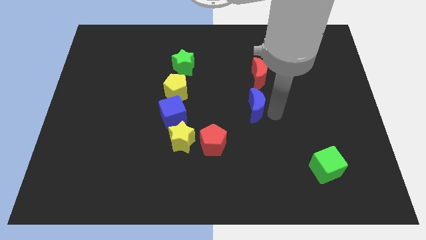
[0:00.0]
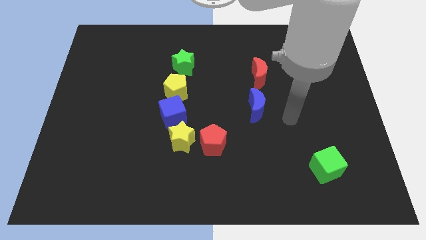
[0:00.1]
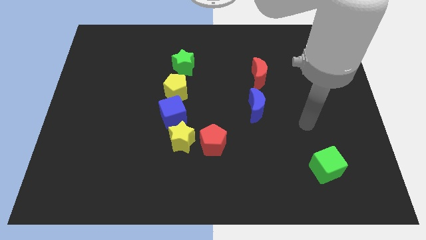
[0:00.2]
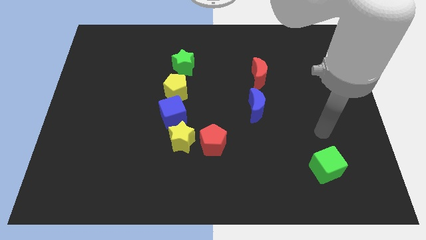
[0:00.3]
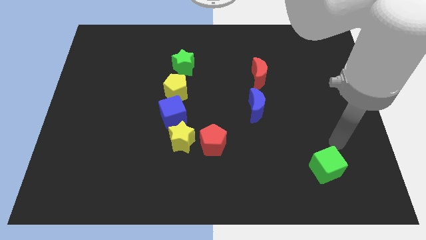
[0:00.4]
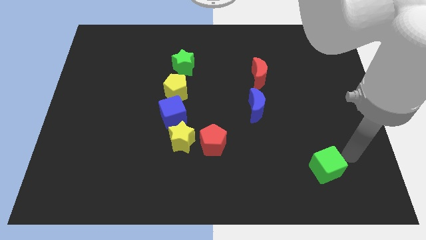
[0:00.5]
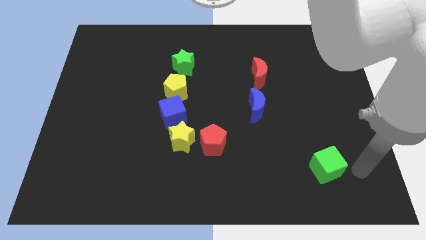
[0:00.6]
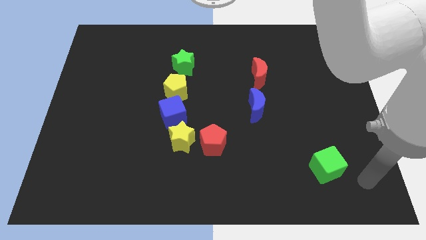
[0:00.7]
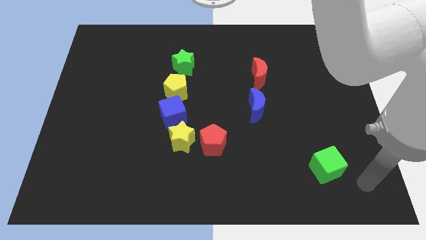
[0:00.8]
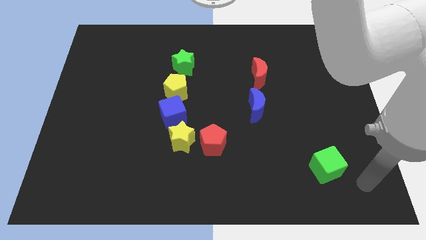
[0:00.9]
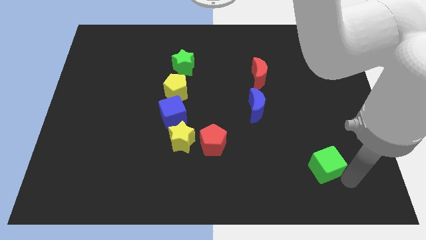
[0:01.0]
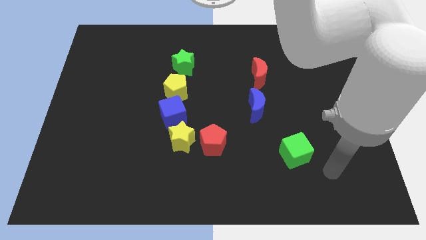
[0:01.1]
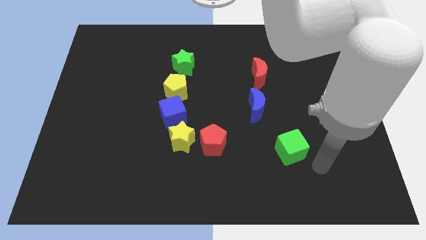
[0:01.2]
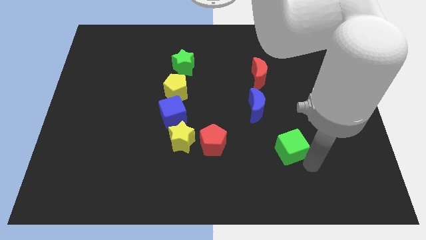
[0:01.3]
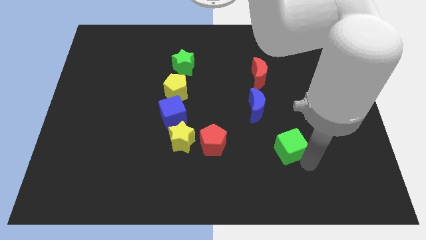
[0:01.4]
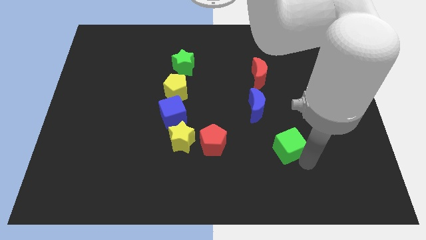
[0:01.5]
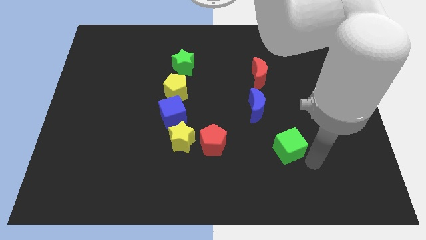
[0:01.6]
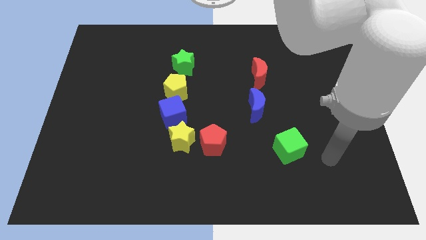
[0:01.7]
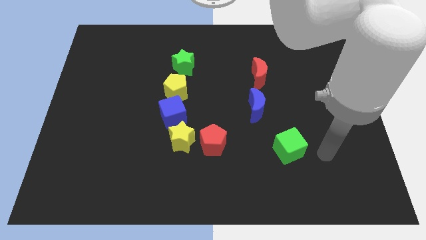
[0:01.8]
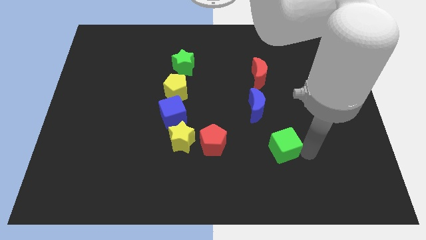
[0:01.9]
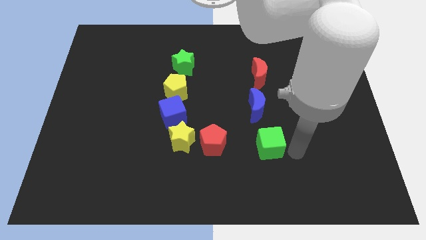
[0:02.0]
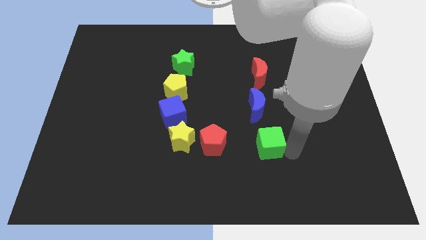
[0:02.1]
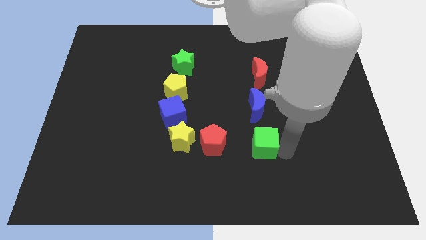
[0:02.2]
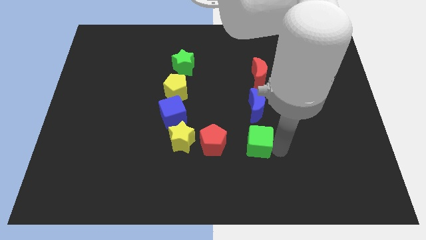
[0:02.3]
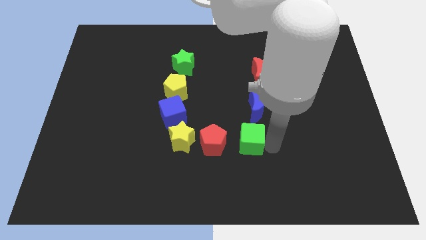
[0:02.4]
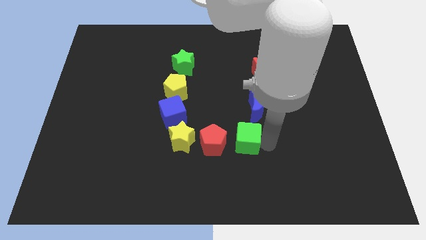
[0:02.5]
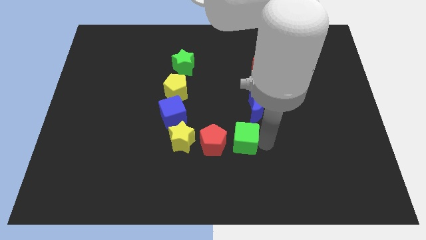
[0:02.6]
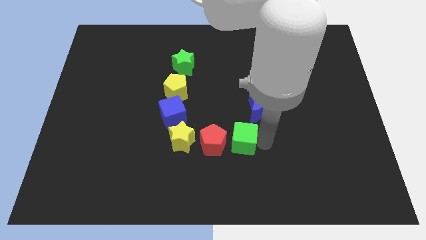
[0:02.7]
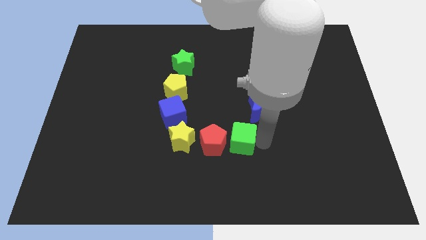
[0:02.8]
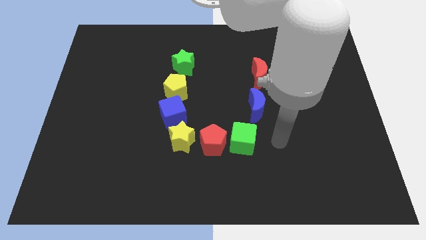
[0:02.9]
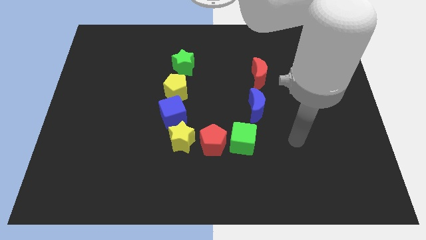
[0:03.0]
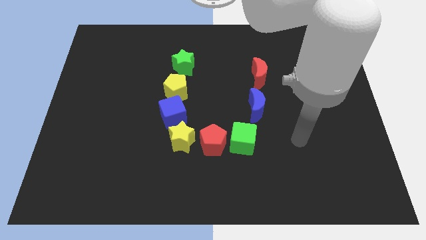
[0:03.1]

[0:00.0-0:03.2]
slide the green cube to the right of the red pentagon

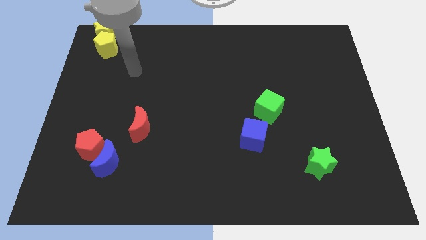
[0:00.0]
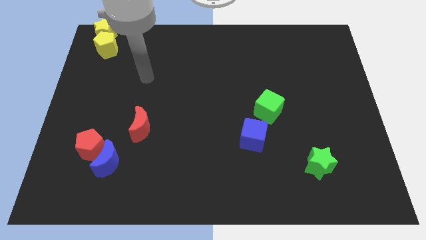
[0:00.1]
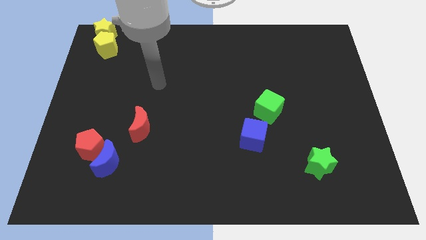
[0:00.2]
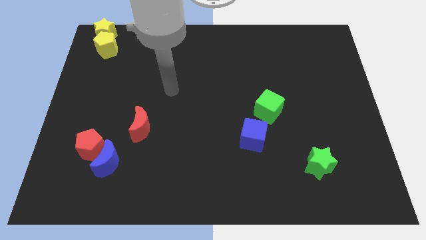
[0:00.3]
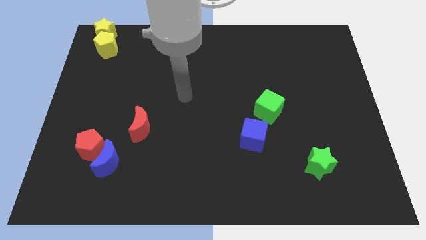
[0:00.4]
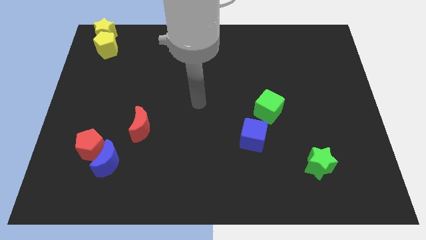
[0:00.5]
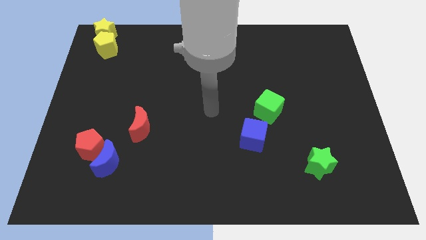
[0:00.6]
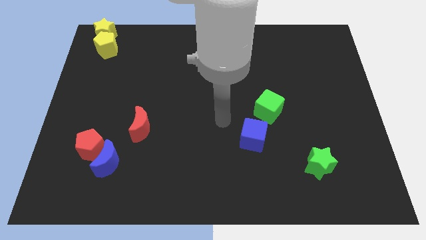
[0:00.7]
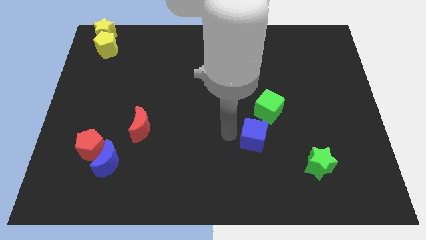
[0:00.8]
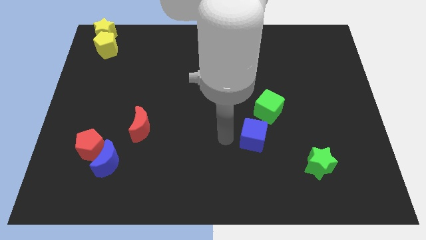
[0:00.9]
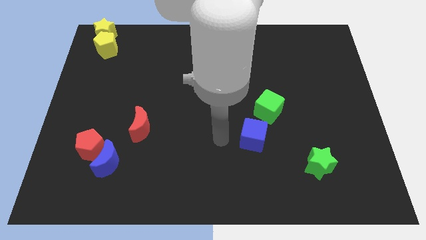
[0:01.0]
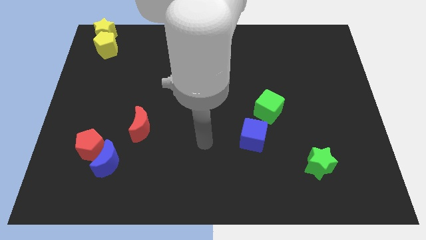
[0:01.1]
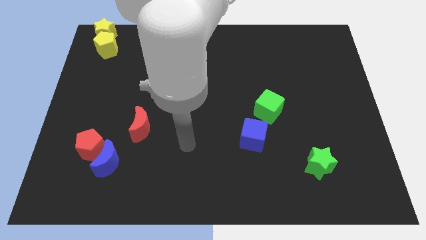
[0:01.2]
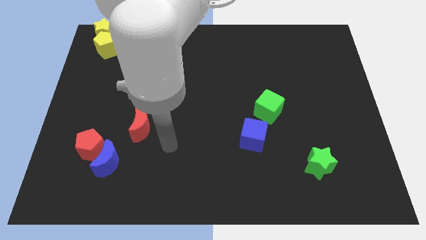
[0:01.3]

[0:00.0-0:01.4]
move the arm away from the yellow pentagon

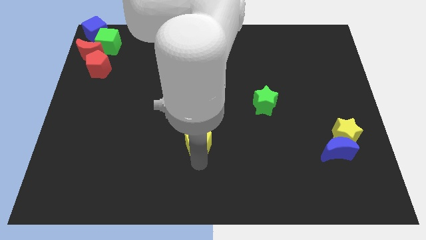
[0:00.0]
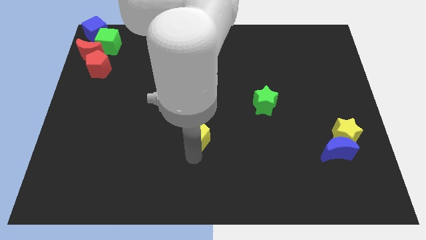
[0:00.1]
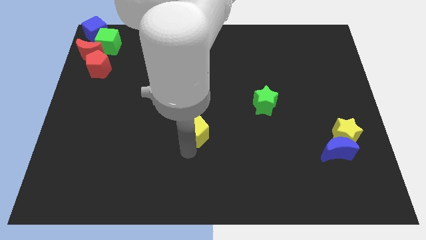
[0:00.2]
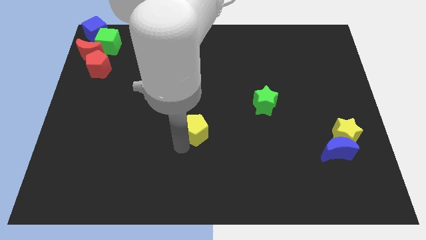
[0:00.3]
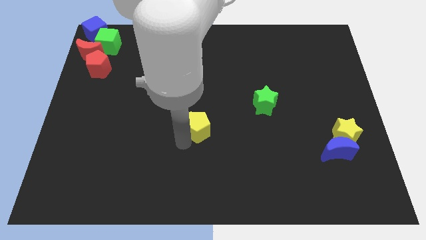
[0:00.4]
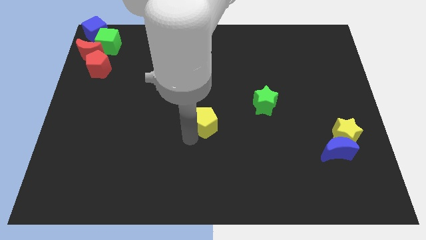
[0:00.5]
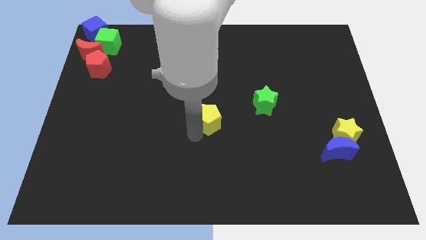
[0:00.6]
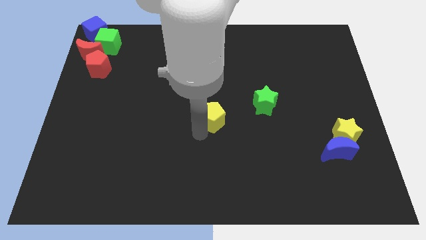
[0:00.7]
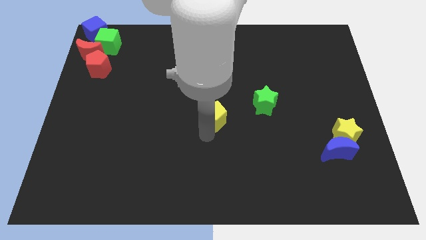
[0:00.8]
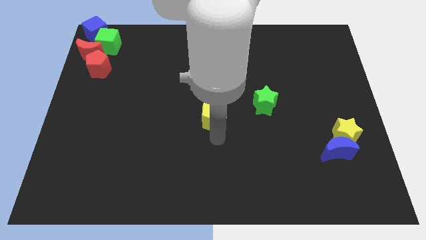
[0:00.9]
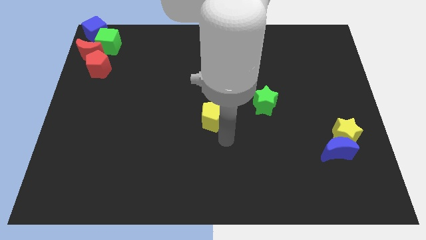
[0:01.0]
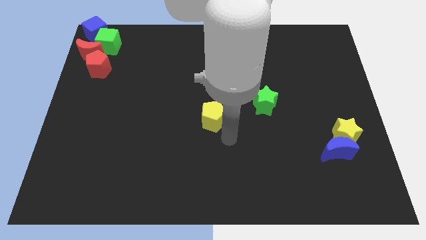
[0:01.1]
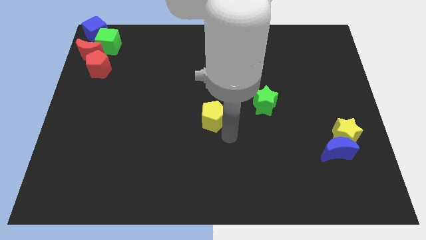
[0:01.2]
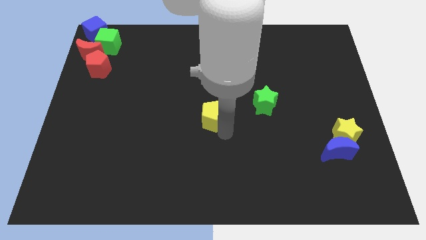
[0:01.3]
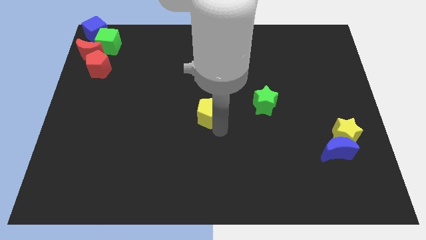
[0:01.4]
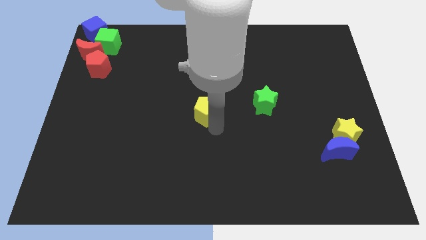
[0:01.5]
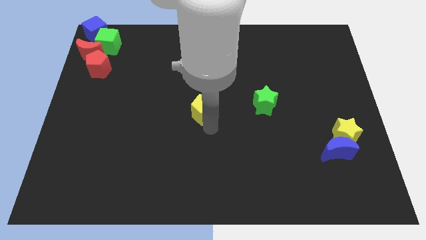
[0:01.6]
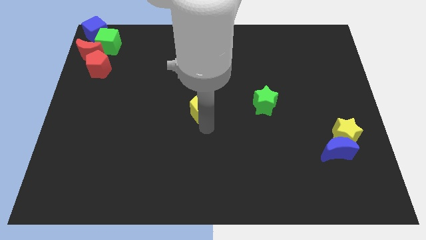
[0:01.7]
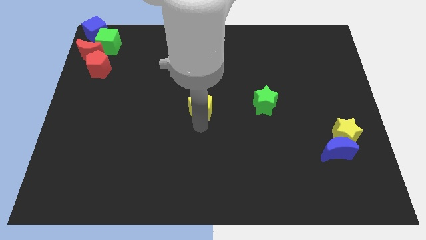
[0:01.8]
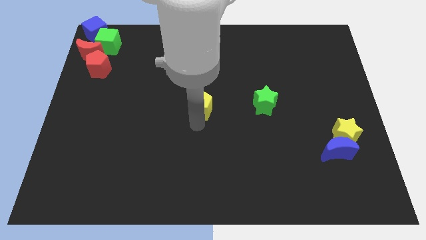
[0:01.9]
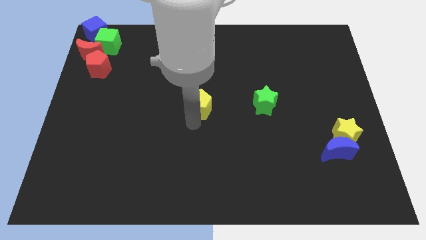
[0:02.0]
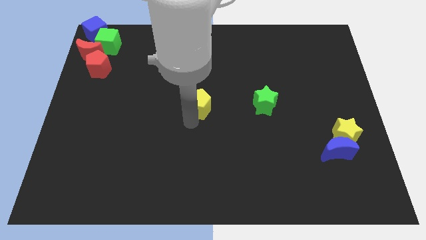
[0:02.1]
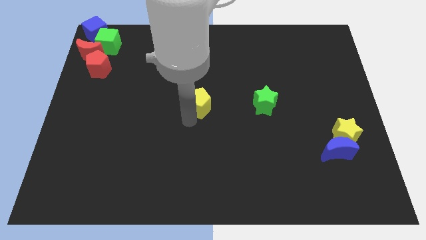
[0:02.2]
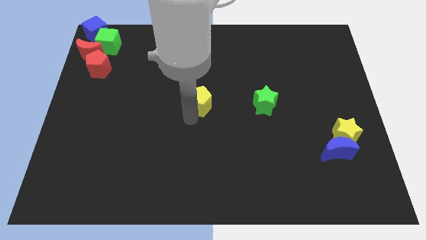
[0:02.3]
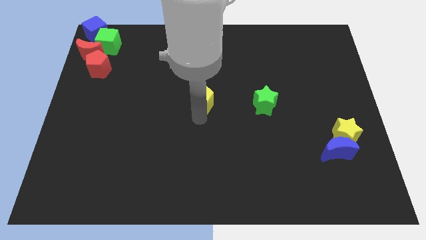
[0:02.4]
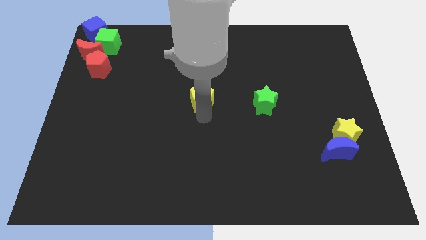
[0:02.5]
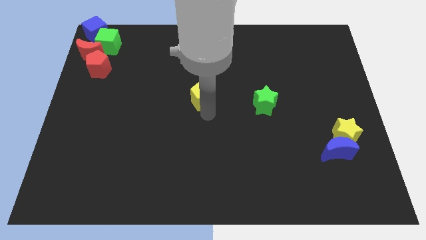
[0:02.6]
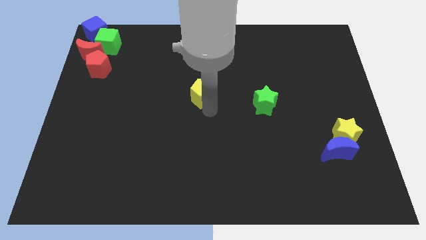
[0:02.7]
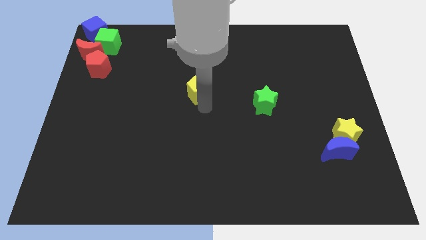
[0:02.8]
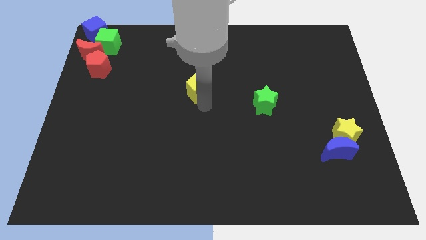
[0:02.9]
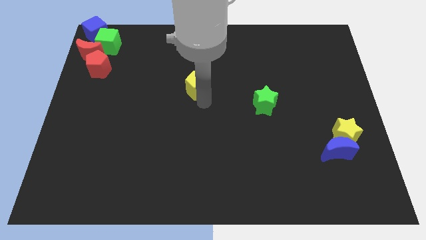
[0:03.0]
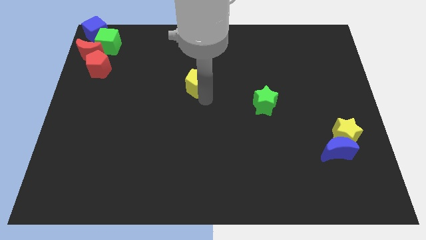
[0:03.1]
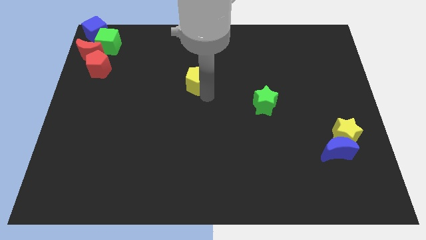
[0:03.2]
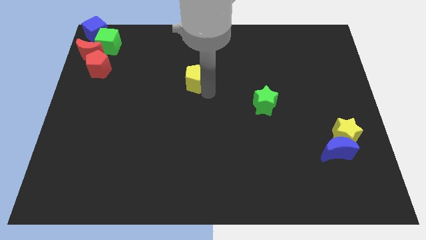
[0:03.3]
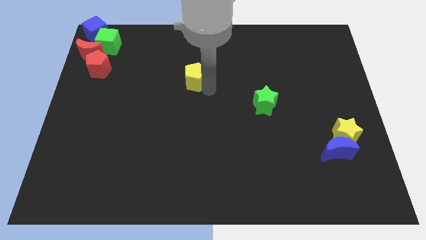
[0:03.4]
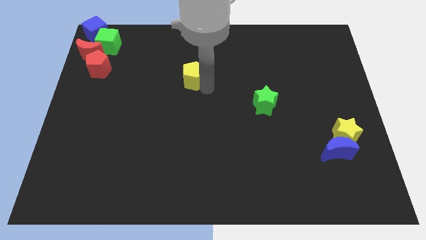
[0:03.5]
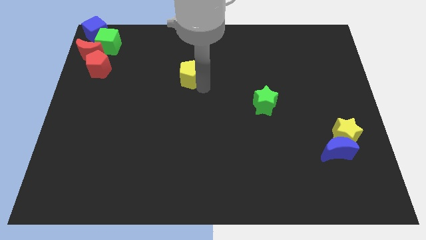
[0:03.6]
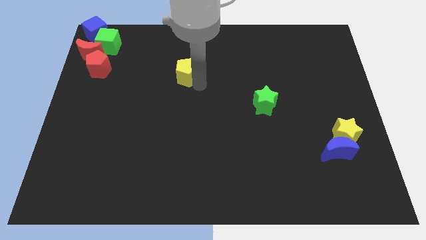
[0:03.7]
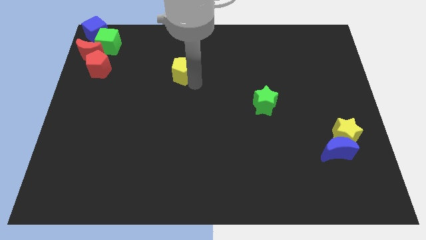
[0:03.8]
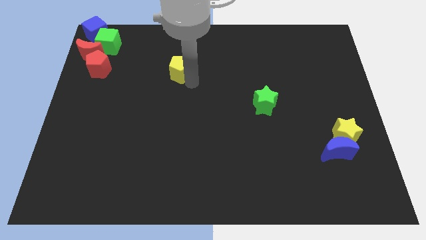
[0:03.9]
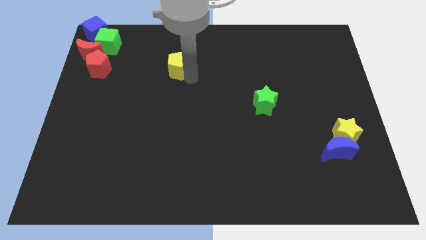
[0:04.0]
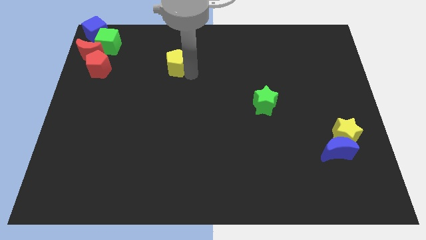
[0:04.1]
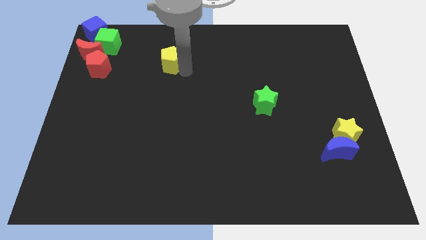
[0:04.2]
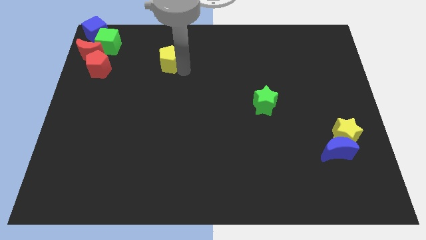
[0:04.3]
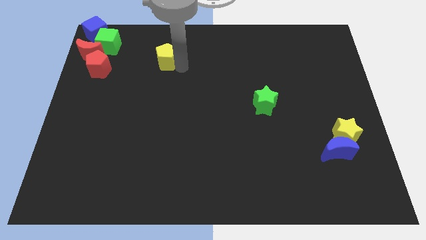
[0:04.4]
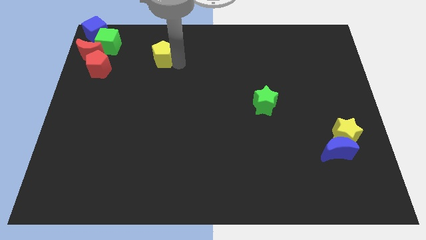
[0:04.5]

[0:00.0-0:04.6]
drag the yellow pentagon towards the group of blocks
